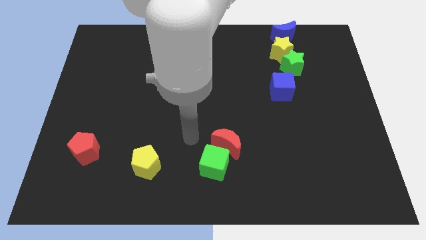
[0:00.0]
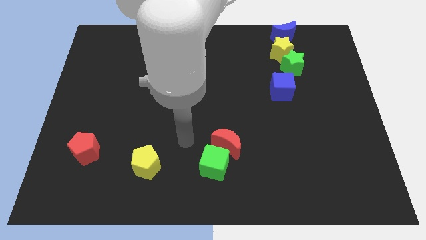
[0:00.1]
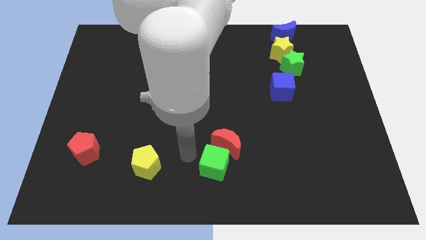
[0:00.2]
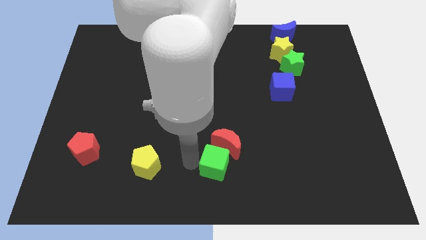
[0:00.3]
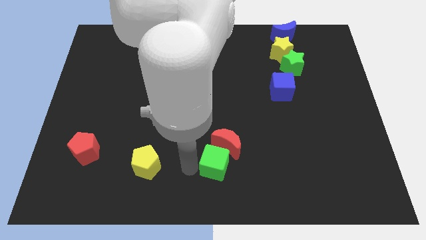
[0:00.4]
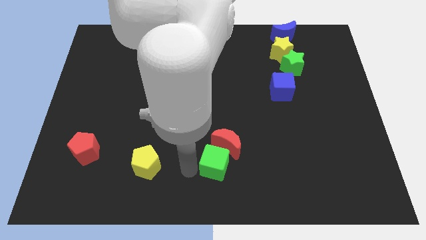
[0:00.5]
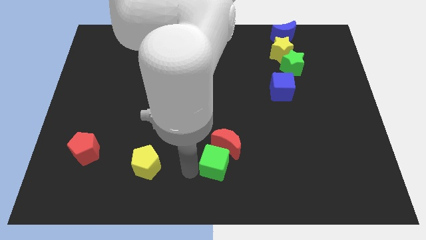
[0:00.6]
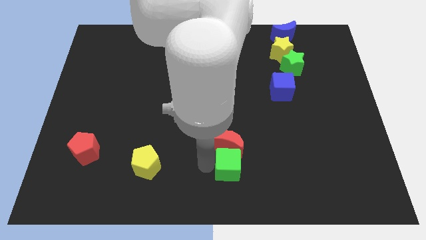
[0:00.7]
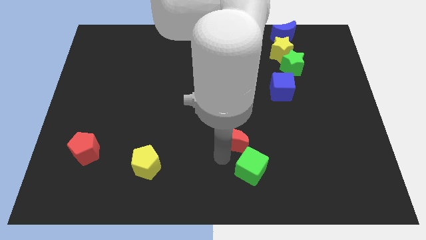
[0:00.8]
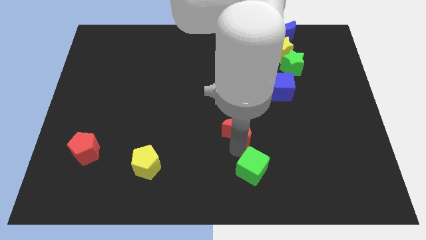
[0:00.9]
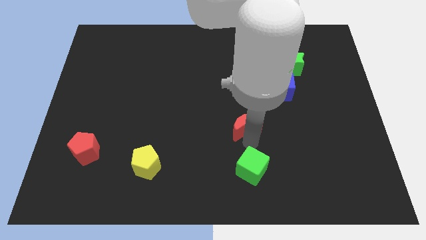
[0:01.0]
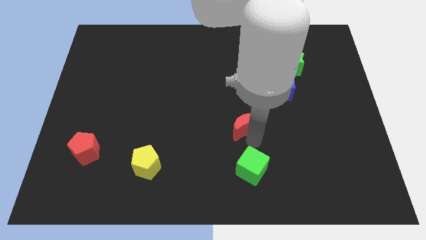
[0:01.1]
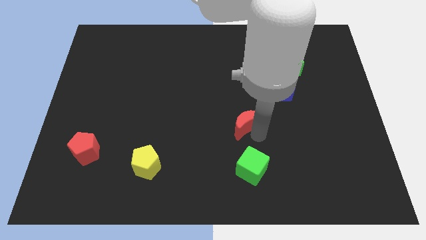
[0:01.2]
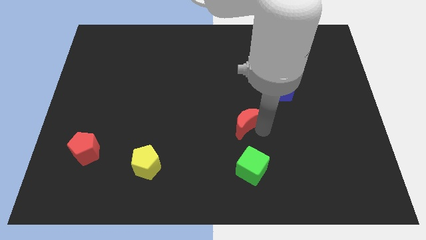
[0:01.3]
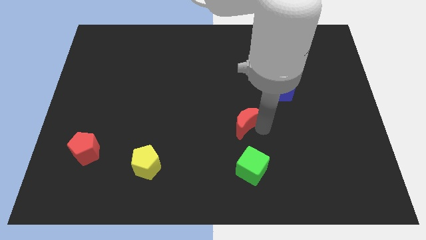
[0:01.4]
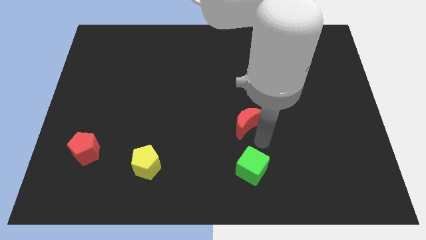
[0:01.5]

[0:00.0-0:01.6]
separate the red moon and green cube from each others

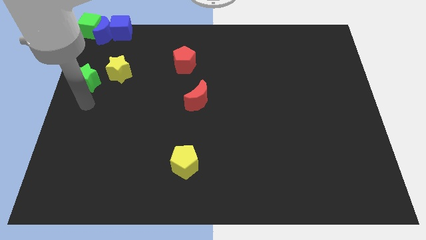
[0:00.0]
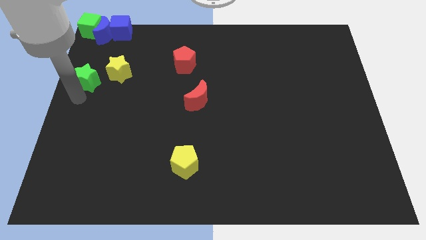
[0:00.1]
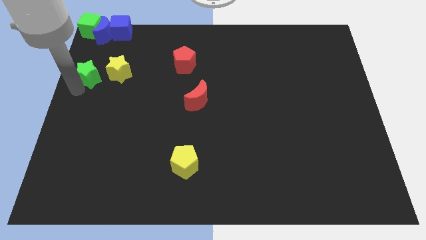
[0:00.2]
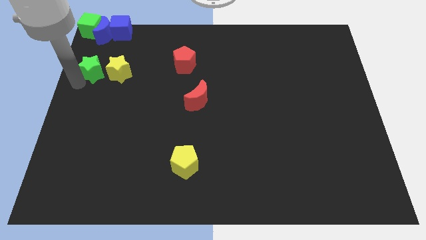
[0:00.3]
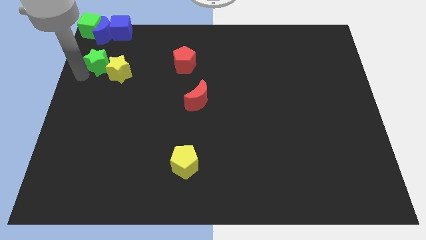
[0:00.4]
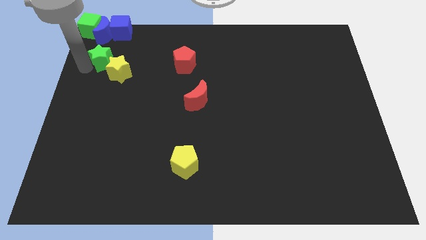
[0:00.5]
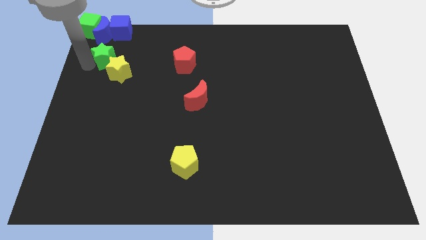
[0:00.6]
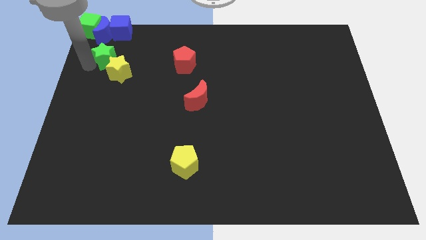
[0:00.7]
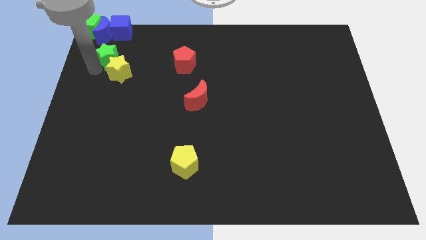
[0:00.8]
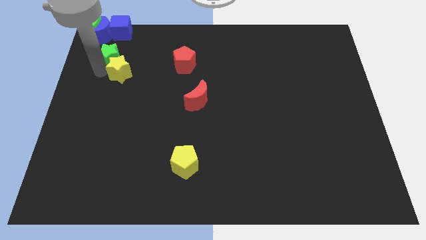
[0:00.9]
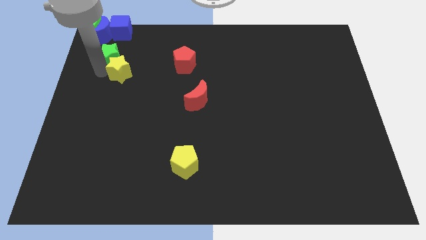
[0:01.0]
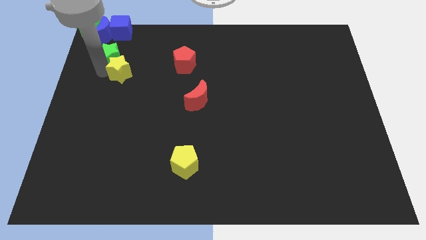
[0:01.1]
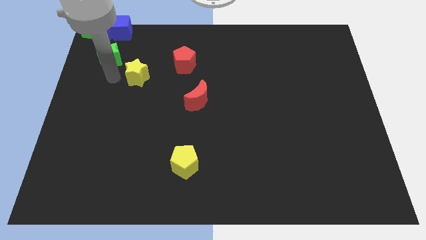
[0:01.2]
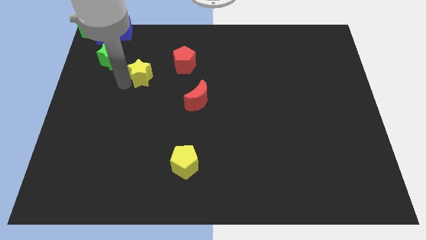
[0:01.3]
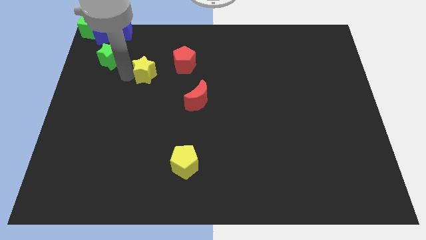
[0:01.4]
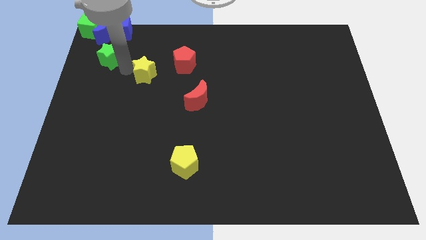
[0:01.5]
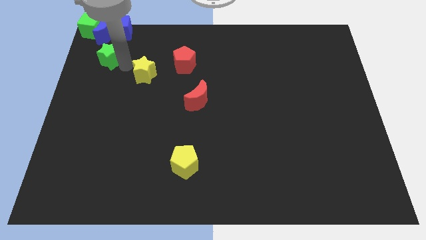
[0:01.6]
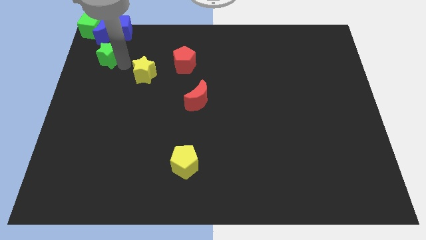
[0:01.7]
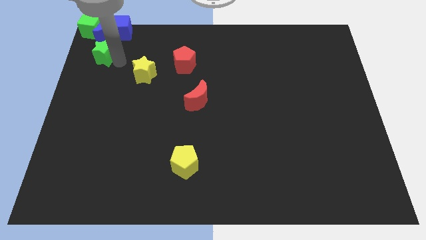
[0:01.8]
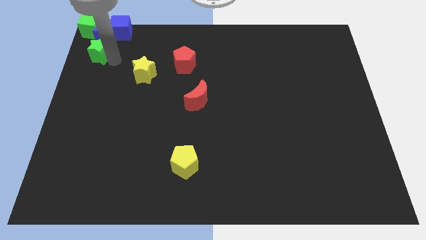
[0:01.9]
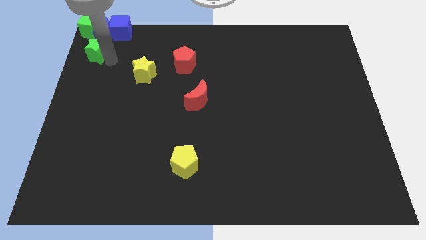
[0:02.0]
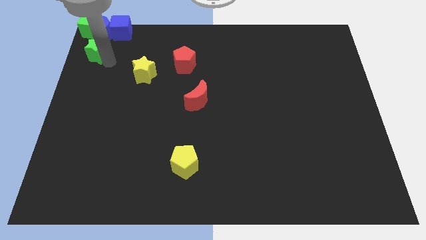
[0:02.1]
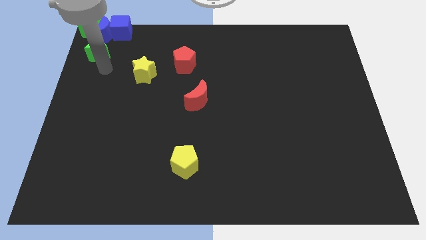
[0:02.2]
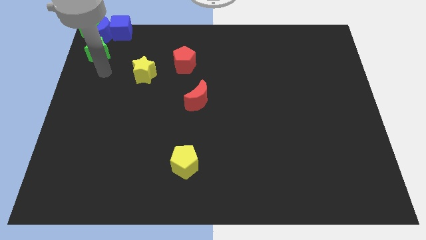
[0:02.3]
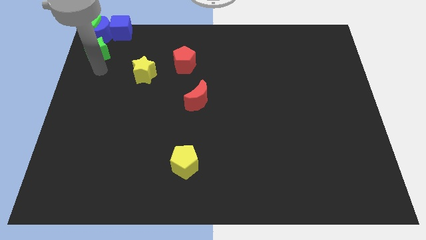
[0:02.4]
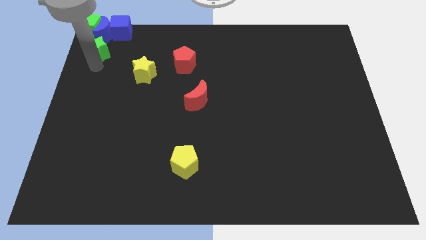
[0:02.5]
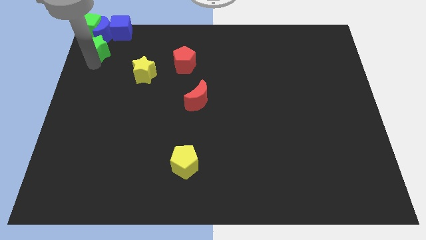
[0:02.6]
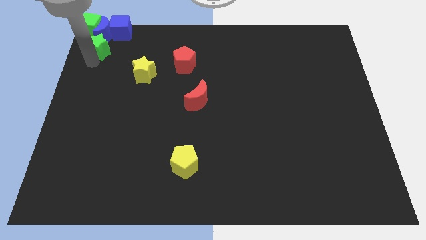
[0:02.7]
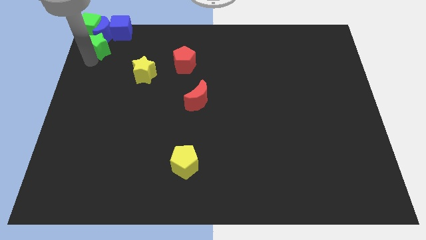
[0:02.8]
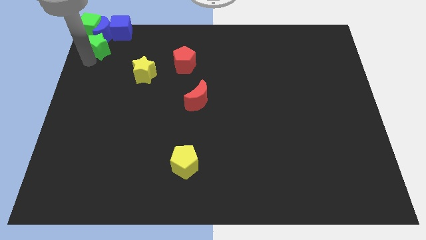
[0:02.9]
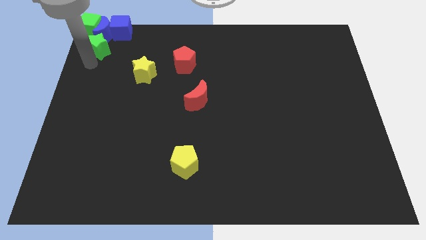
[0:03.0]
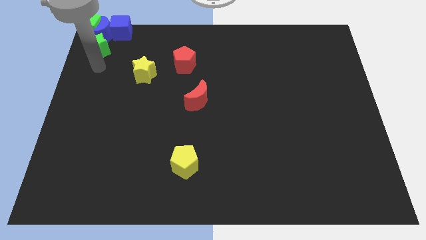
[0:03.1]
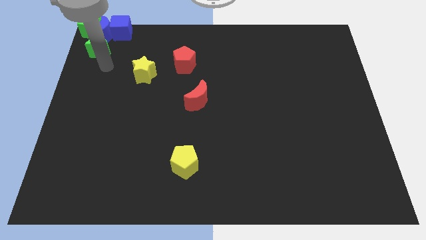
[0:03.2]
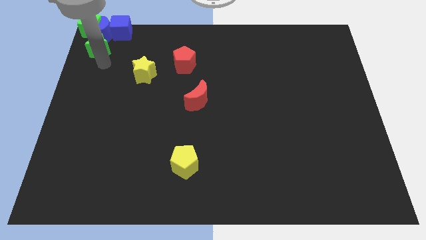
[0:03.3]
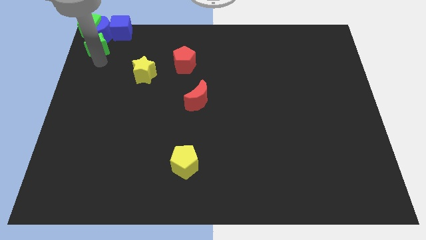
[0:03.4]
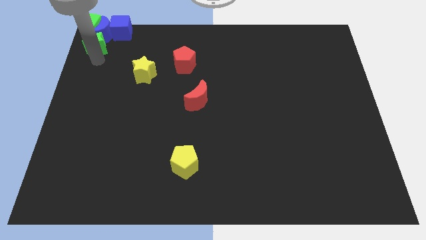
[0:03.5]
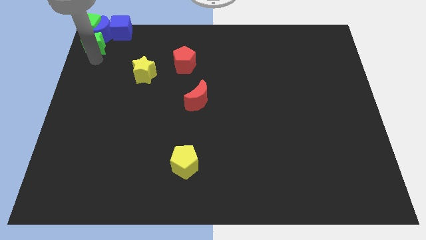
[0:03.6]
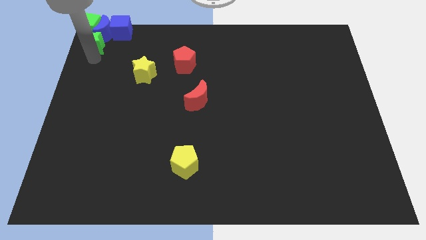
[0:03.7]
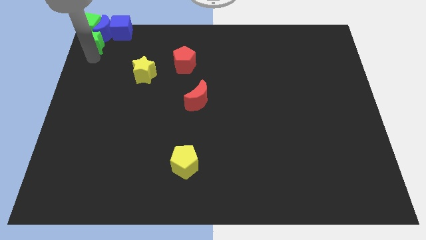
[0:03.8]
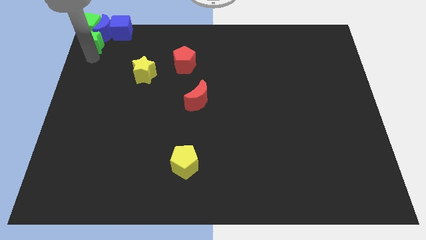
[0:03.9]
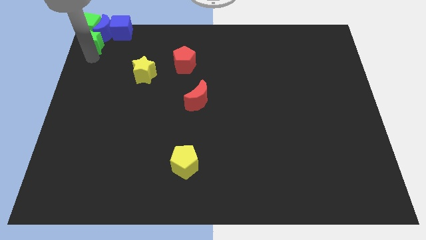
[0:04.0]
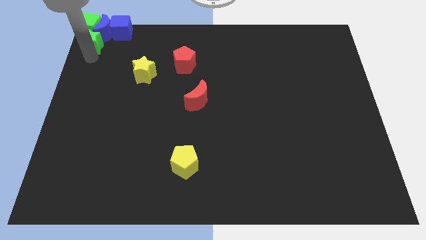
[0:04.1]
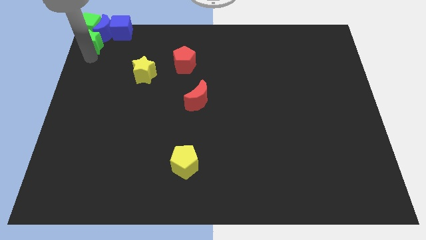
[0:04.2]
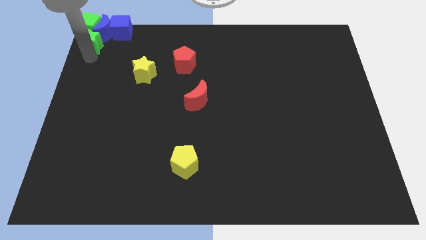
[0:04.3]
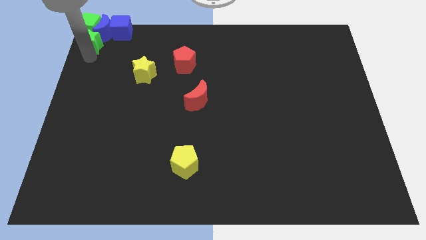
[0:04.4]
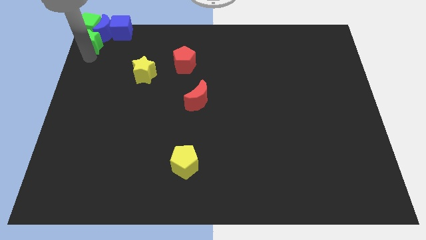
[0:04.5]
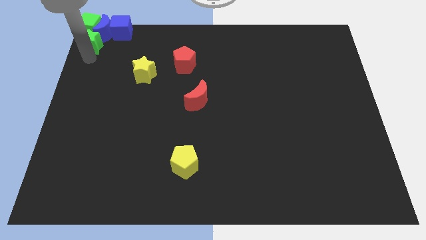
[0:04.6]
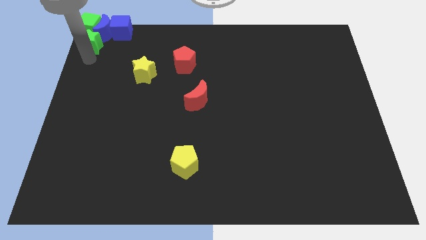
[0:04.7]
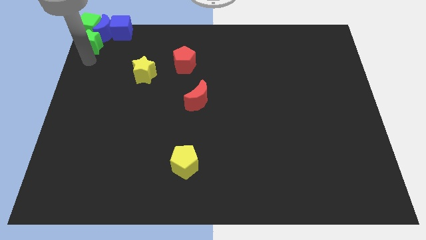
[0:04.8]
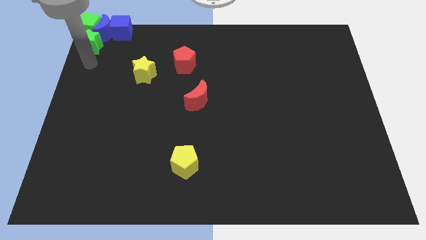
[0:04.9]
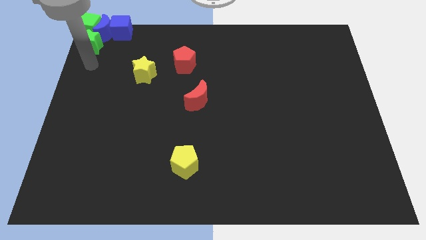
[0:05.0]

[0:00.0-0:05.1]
slide the green star to the bottom of the green cube and the blue moon

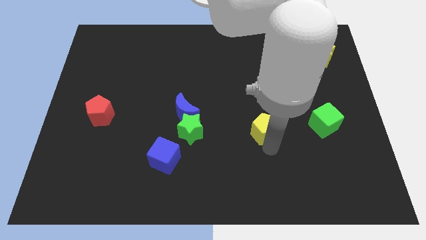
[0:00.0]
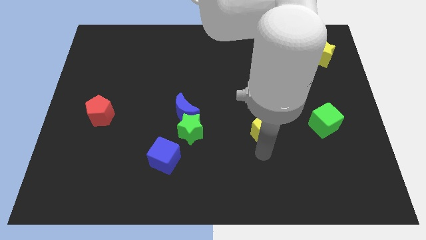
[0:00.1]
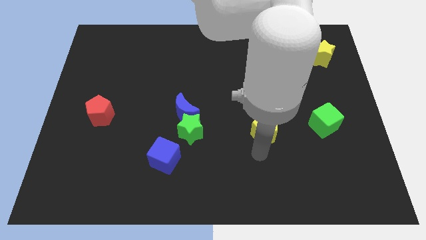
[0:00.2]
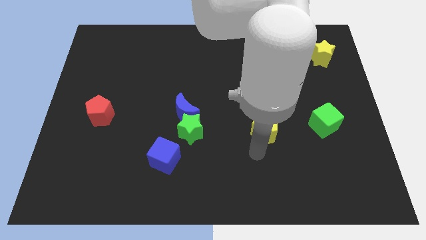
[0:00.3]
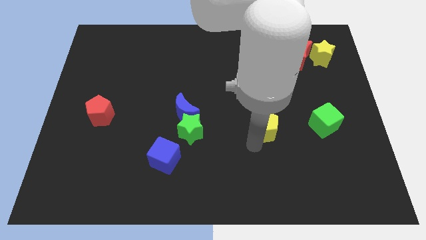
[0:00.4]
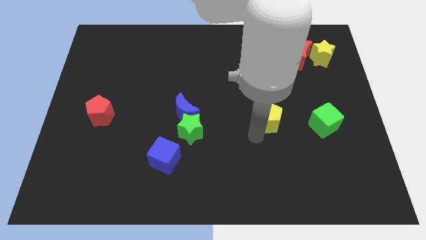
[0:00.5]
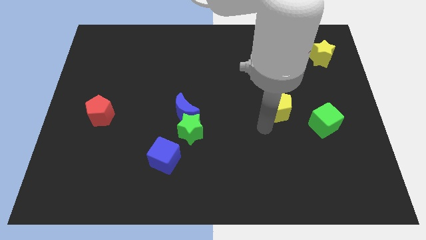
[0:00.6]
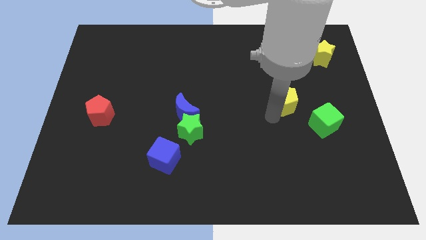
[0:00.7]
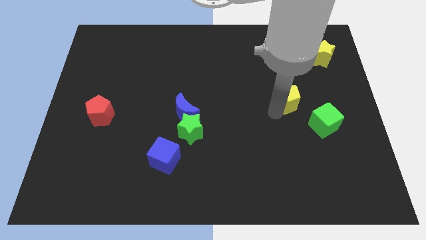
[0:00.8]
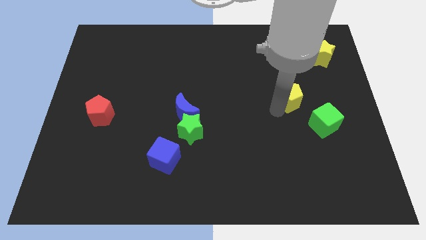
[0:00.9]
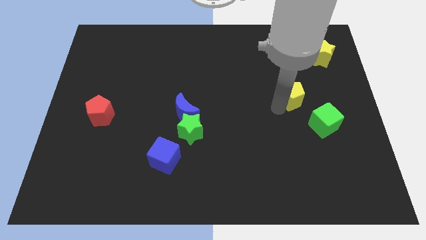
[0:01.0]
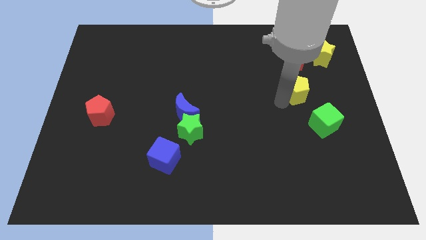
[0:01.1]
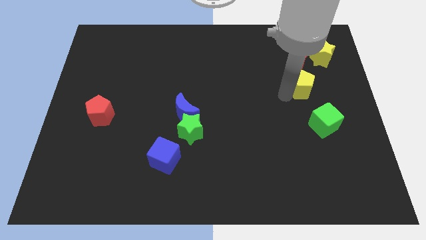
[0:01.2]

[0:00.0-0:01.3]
move the yellow pentagon below the red moon

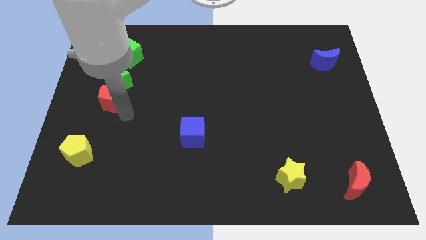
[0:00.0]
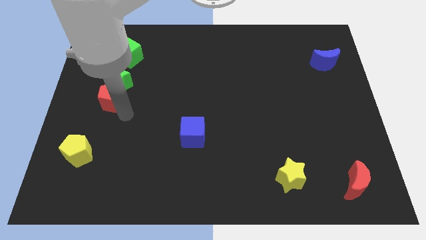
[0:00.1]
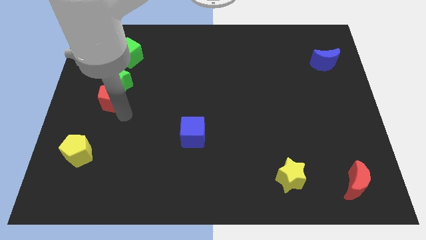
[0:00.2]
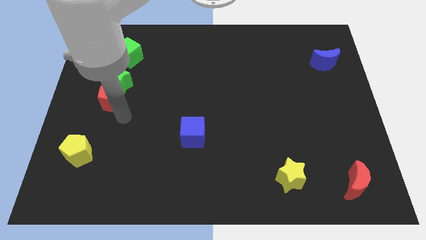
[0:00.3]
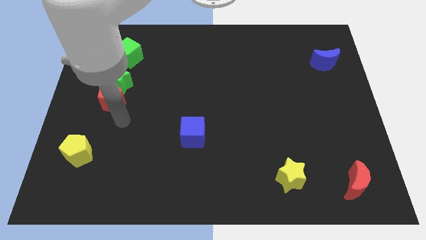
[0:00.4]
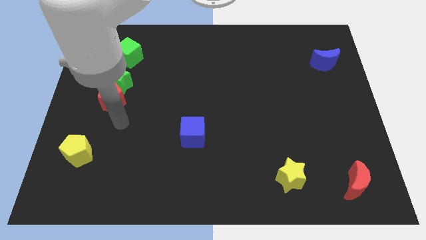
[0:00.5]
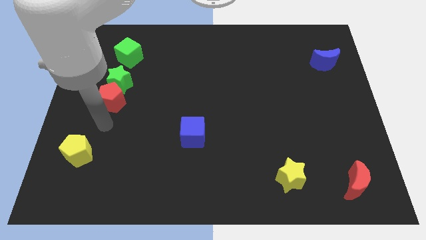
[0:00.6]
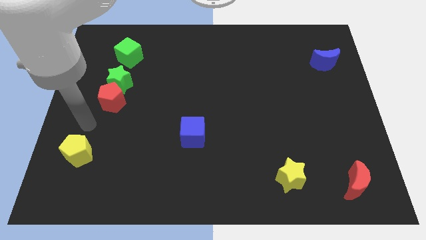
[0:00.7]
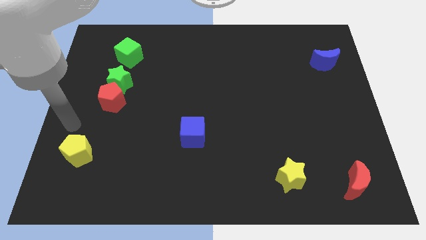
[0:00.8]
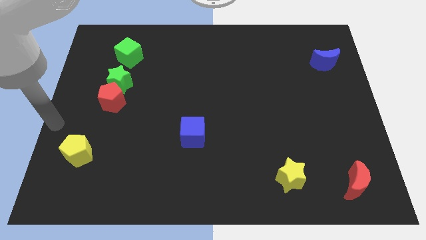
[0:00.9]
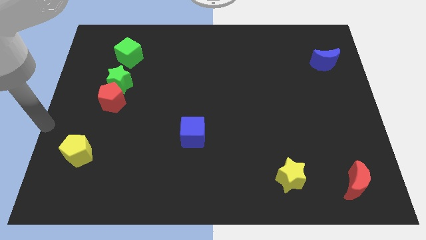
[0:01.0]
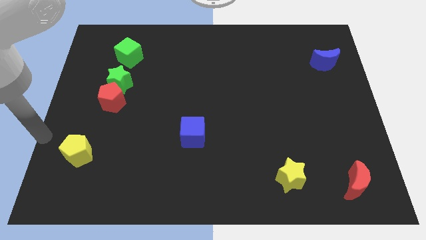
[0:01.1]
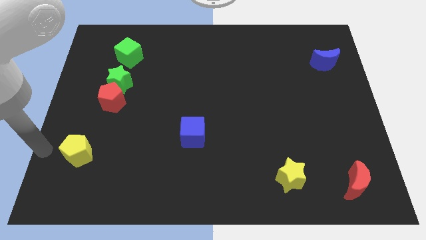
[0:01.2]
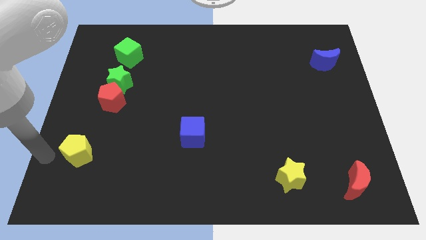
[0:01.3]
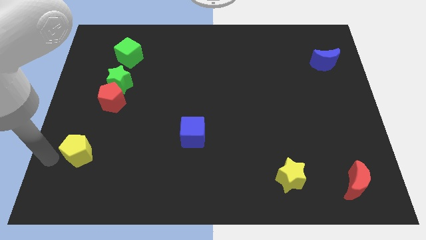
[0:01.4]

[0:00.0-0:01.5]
move your arm away from the red pentagon
